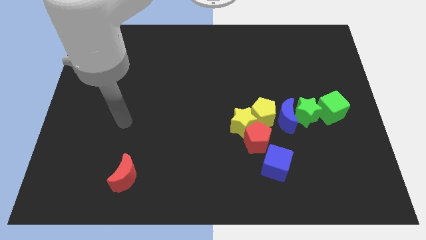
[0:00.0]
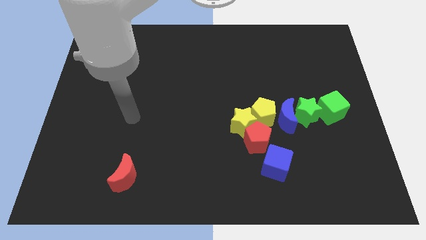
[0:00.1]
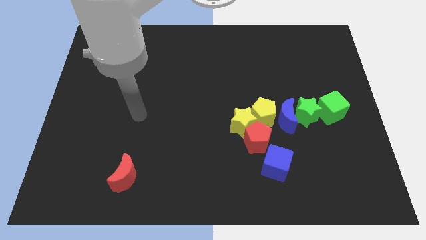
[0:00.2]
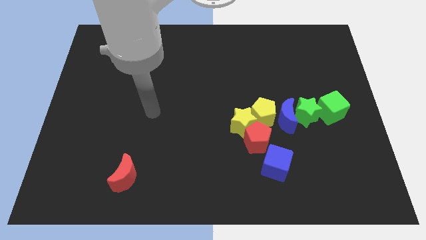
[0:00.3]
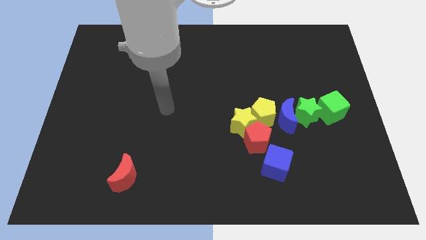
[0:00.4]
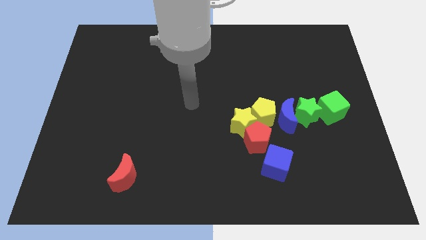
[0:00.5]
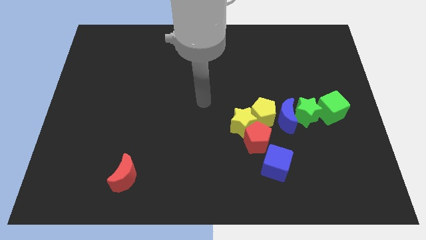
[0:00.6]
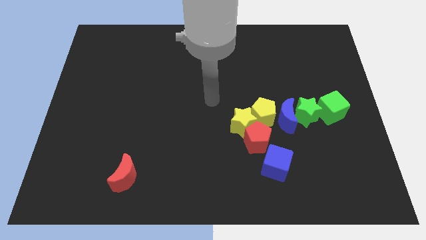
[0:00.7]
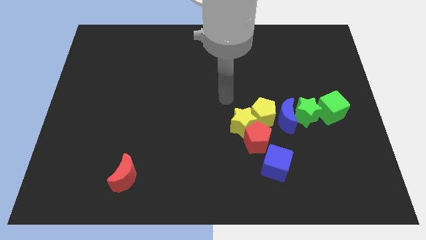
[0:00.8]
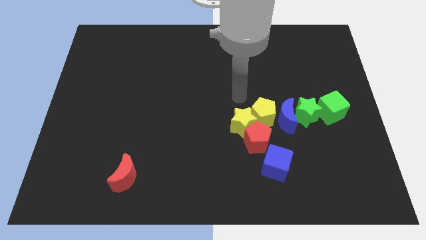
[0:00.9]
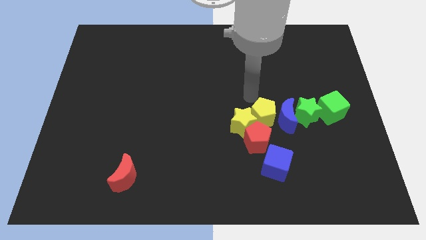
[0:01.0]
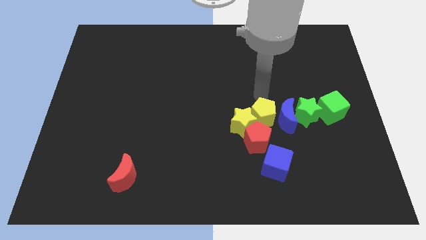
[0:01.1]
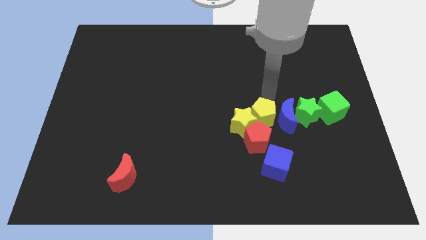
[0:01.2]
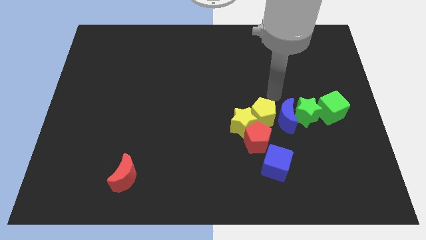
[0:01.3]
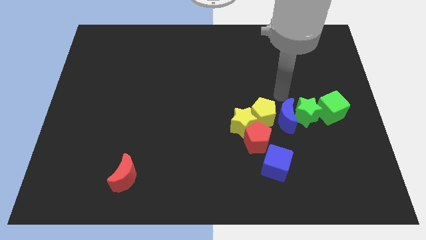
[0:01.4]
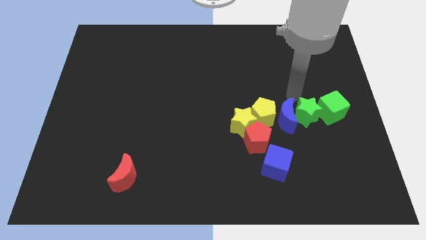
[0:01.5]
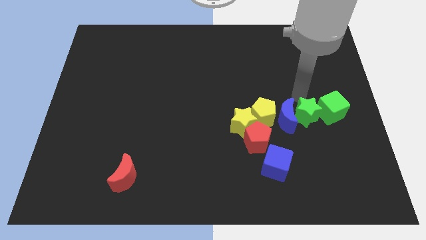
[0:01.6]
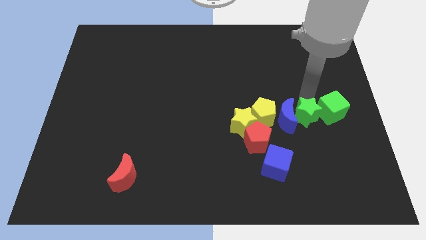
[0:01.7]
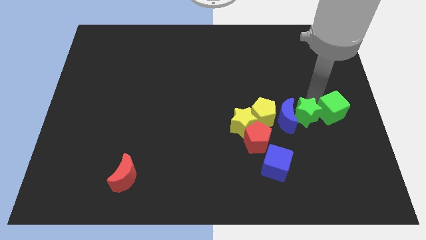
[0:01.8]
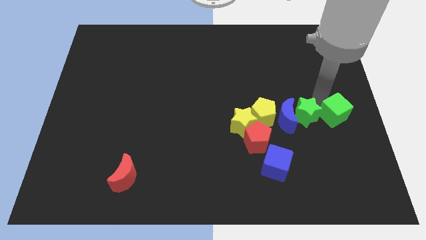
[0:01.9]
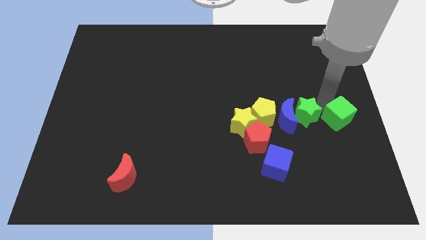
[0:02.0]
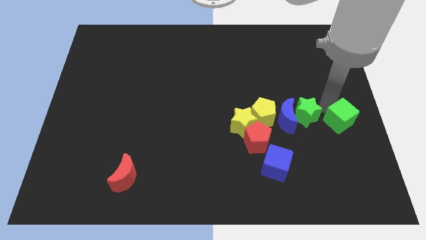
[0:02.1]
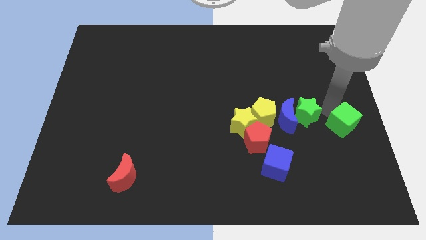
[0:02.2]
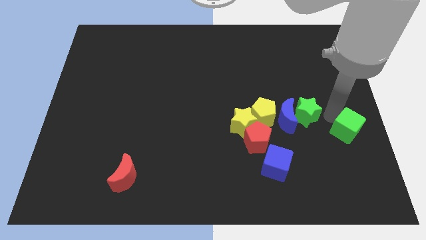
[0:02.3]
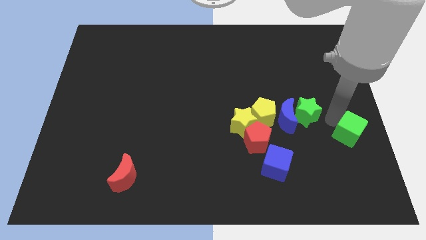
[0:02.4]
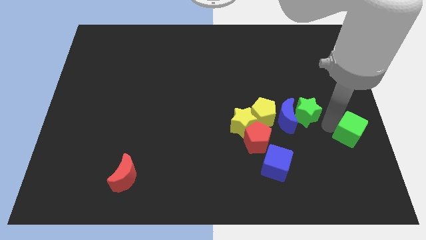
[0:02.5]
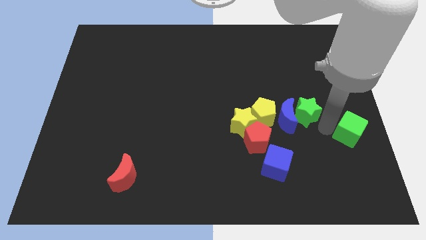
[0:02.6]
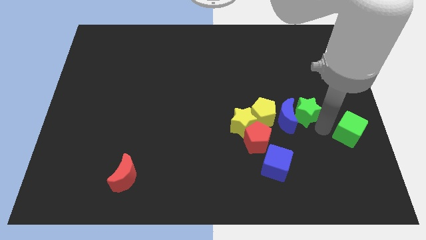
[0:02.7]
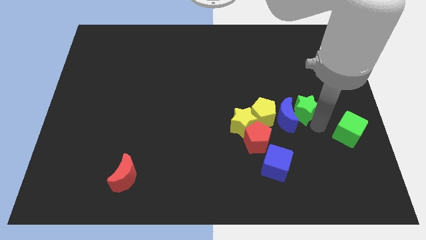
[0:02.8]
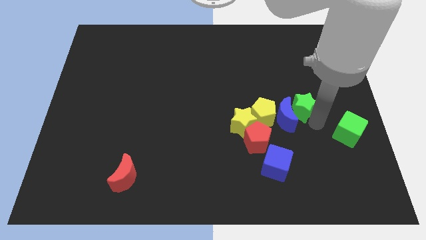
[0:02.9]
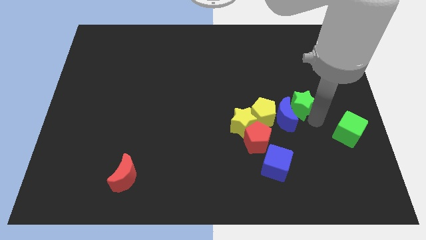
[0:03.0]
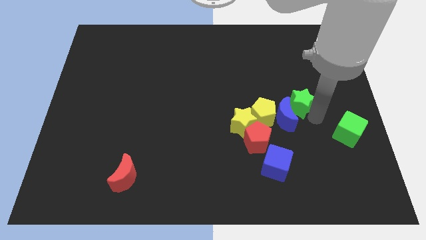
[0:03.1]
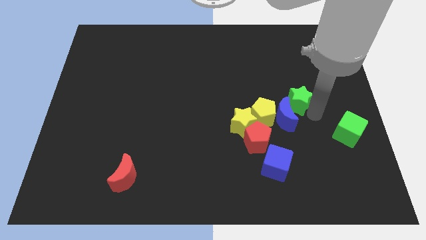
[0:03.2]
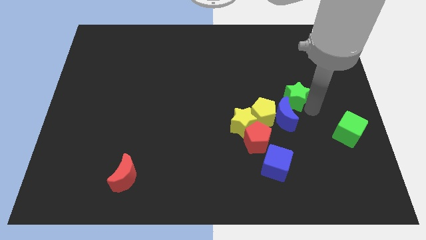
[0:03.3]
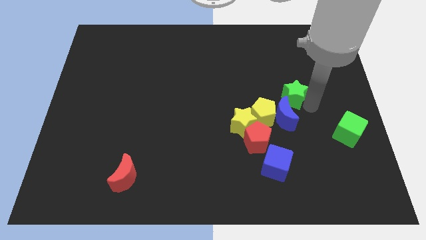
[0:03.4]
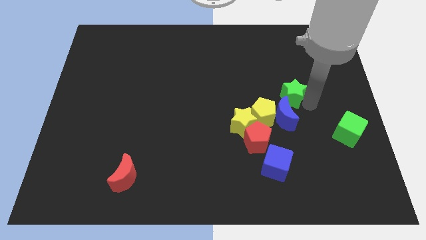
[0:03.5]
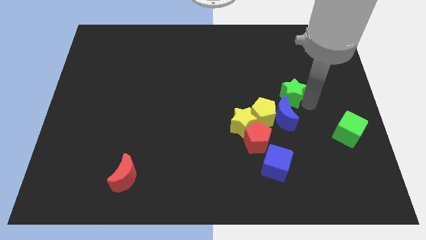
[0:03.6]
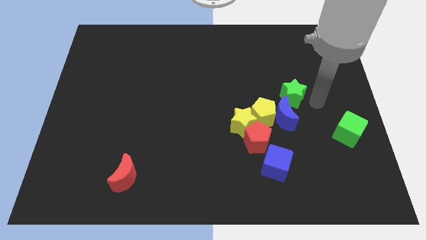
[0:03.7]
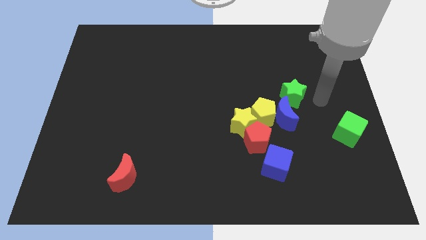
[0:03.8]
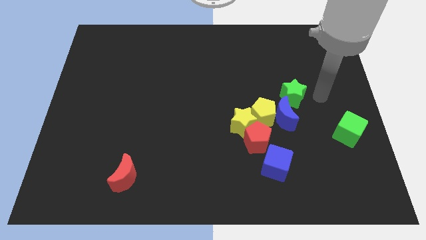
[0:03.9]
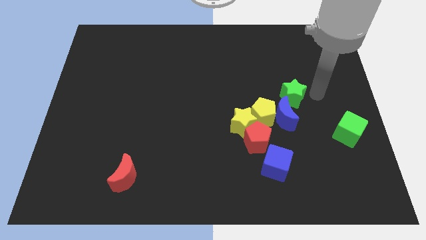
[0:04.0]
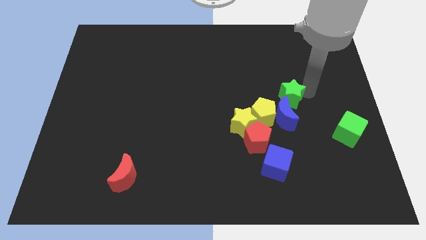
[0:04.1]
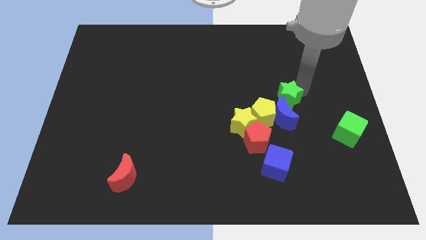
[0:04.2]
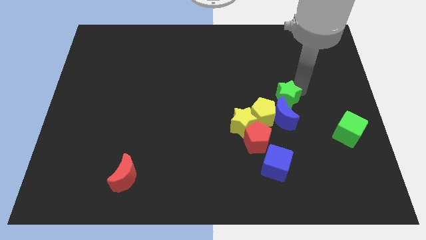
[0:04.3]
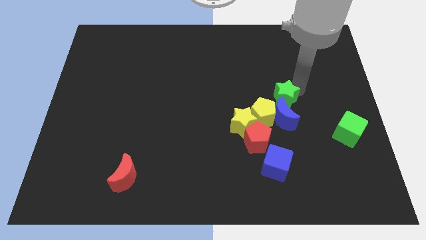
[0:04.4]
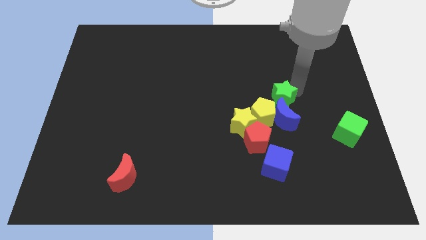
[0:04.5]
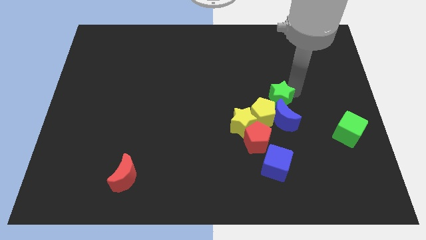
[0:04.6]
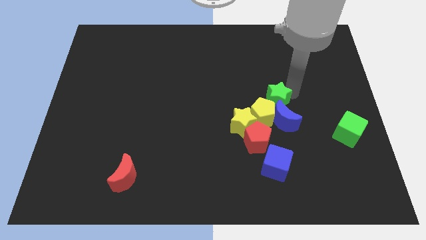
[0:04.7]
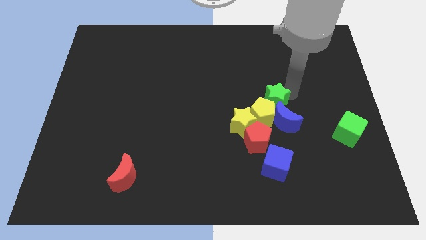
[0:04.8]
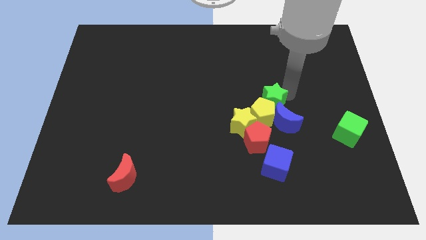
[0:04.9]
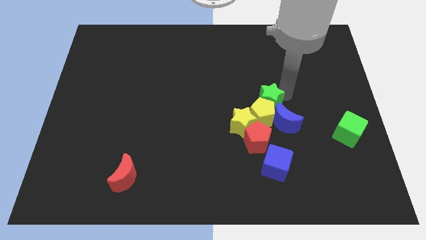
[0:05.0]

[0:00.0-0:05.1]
move the green star close to the yellow pentagon

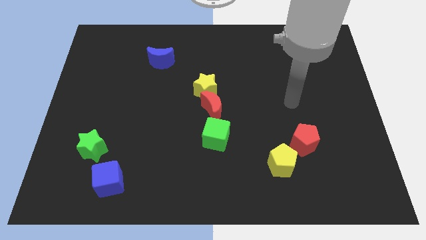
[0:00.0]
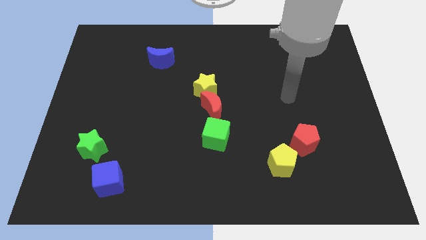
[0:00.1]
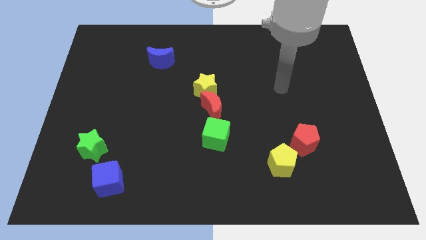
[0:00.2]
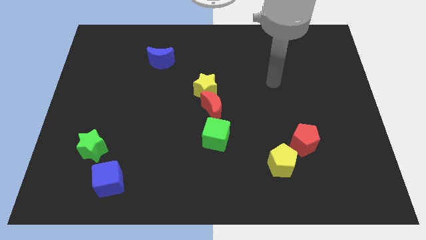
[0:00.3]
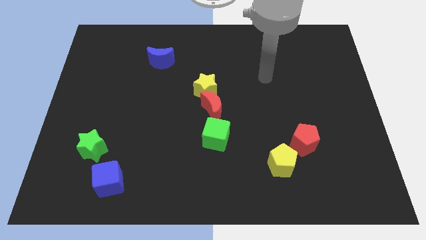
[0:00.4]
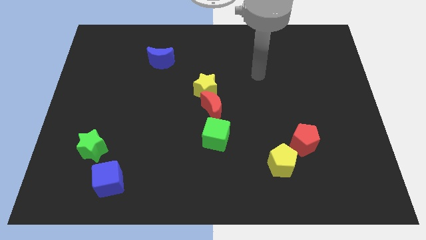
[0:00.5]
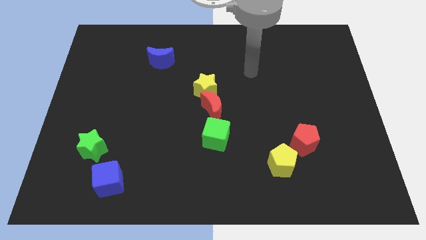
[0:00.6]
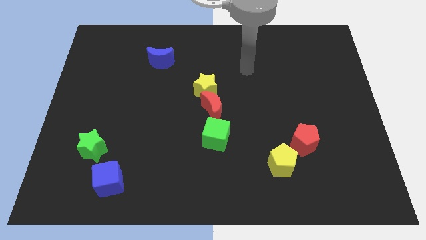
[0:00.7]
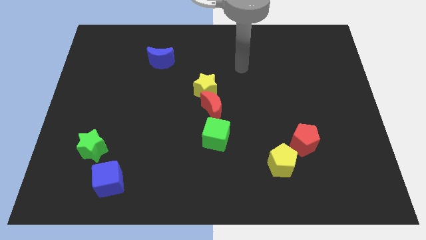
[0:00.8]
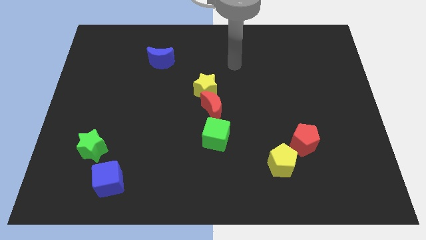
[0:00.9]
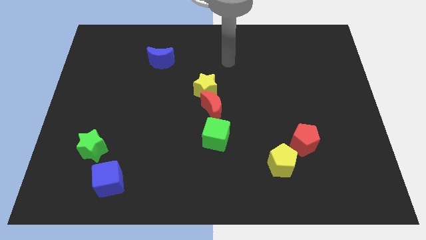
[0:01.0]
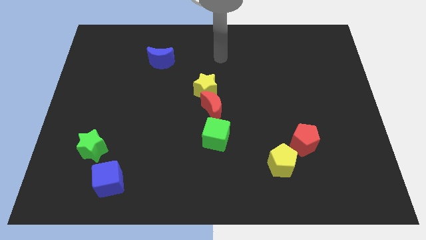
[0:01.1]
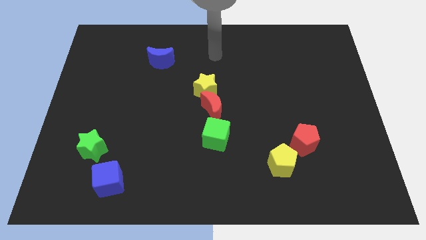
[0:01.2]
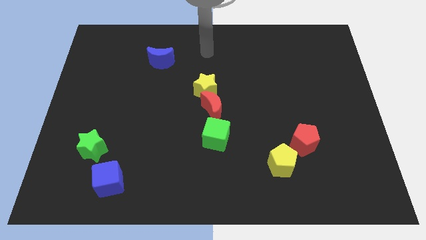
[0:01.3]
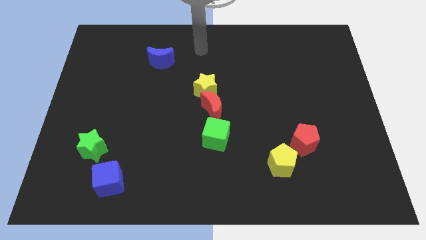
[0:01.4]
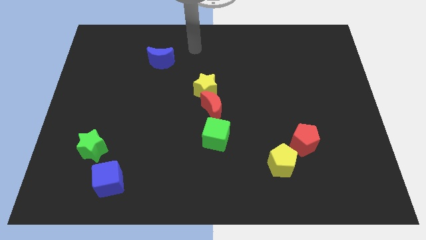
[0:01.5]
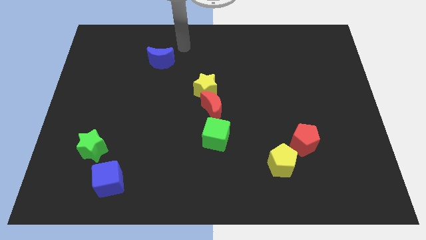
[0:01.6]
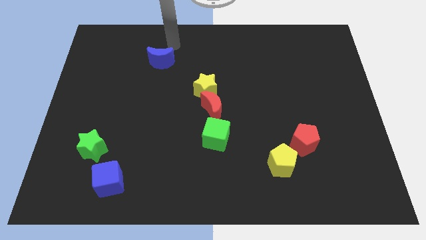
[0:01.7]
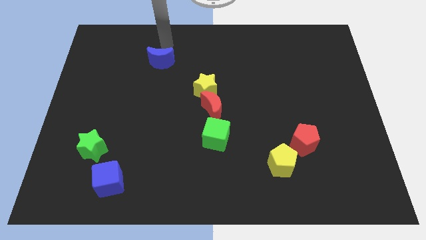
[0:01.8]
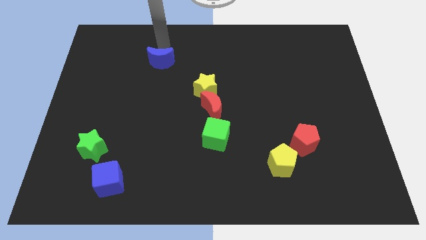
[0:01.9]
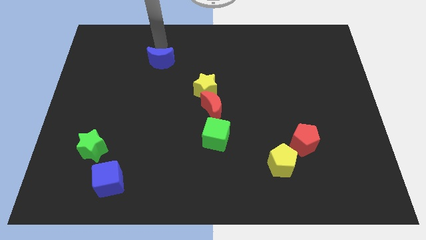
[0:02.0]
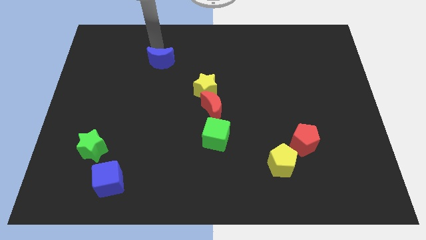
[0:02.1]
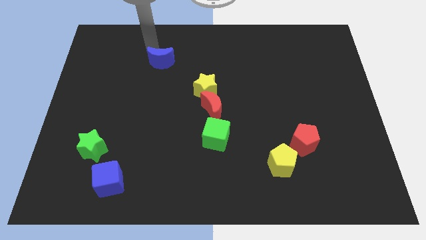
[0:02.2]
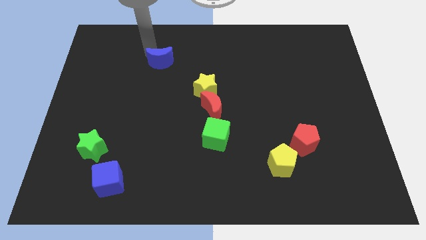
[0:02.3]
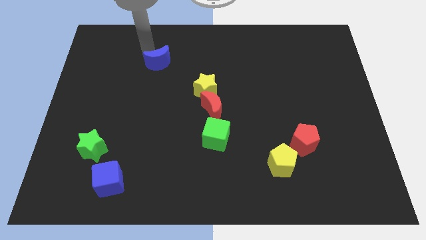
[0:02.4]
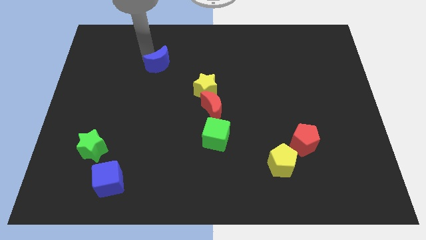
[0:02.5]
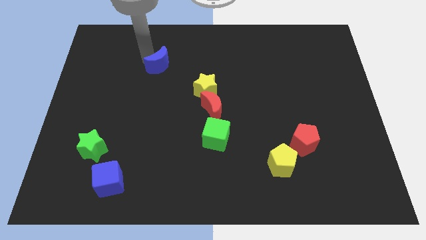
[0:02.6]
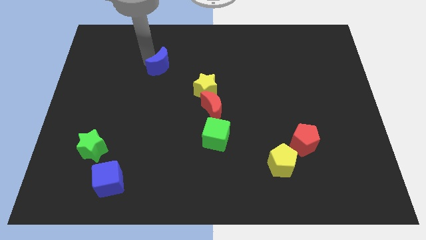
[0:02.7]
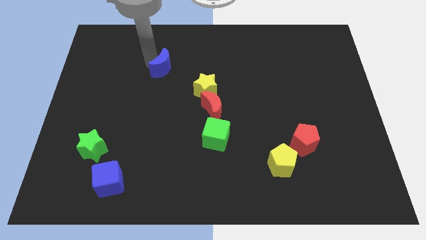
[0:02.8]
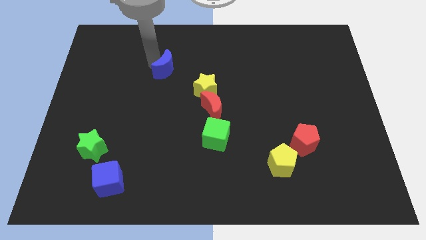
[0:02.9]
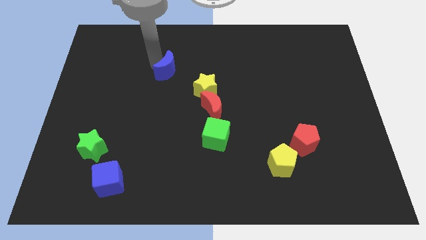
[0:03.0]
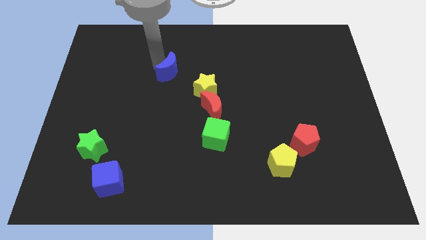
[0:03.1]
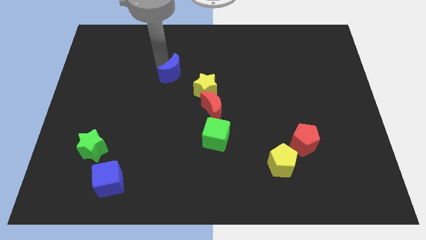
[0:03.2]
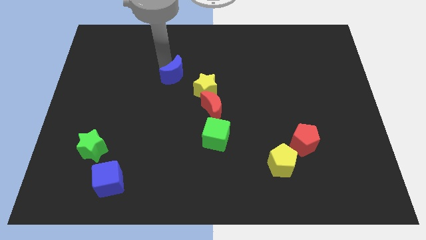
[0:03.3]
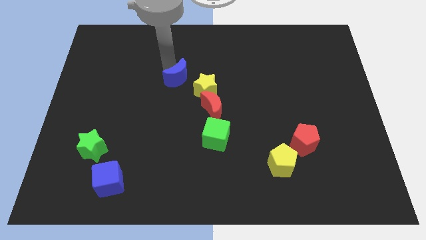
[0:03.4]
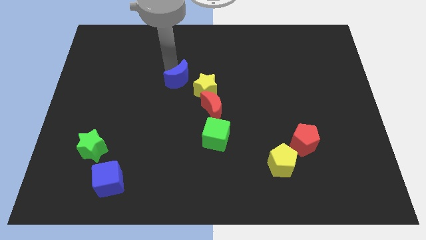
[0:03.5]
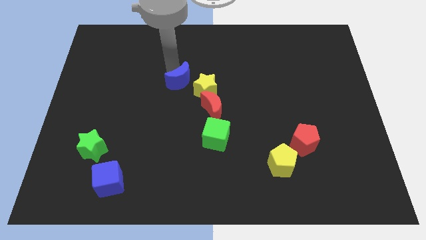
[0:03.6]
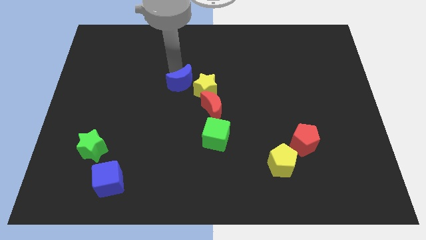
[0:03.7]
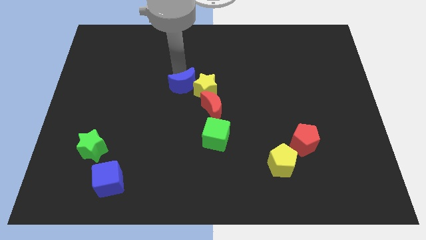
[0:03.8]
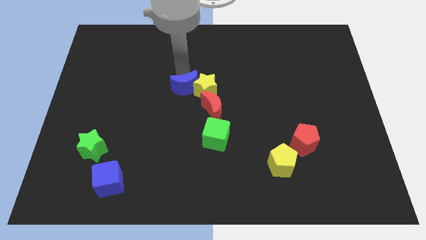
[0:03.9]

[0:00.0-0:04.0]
slide the blue moon towards the yellow star
